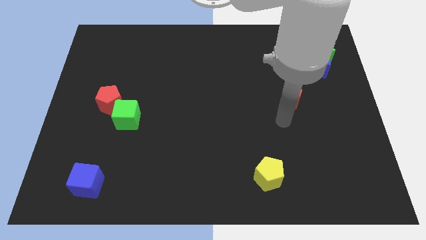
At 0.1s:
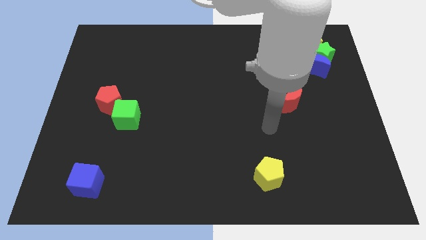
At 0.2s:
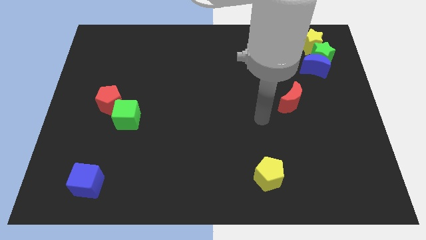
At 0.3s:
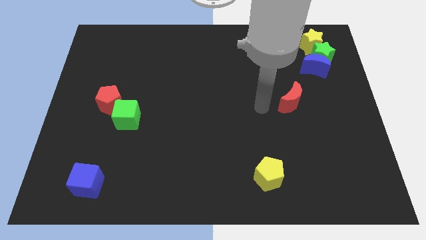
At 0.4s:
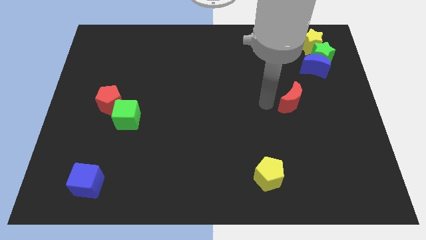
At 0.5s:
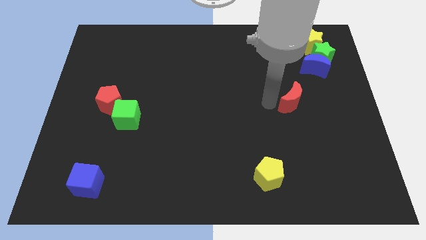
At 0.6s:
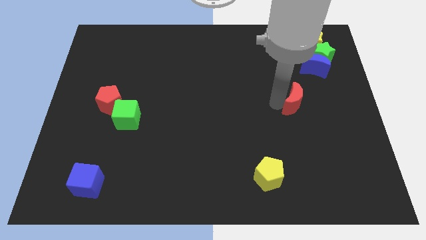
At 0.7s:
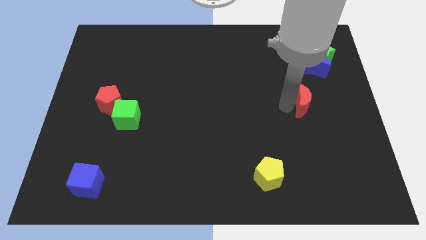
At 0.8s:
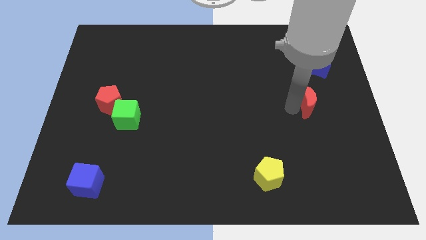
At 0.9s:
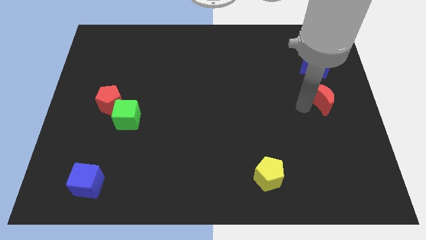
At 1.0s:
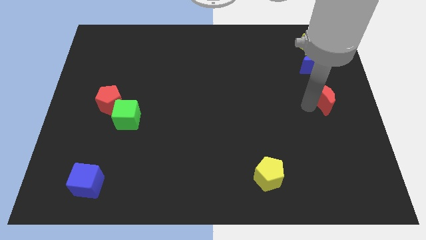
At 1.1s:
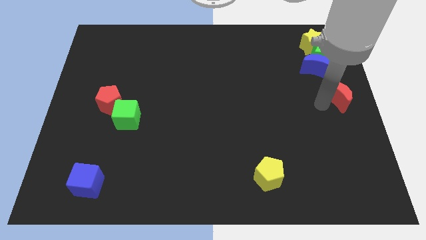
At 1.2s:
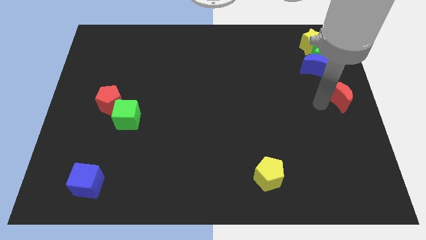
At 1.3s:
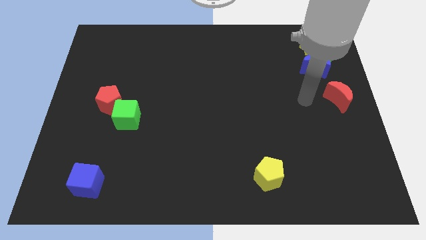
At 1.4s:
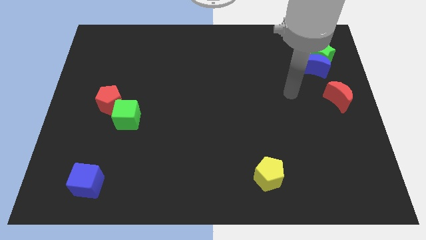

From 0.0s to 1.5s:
push the red crescent to the right of the board

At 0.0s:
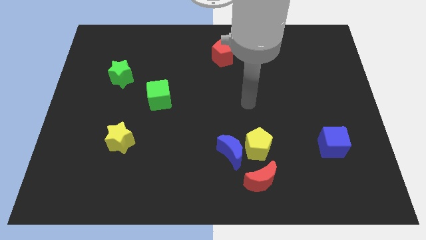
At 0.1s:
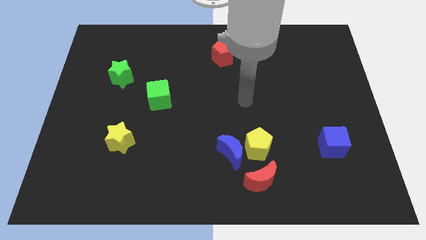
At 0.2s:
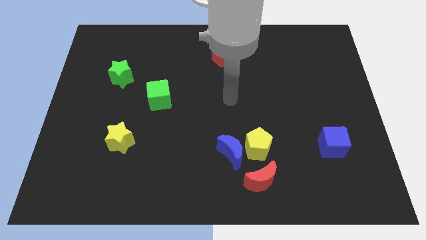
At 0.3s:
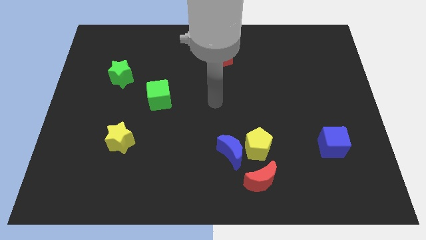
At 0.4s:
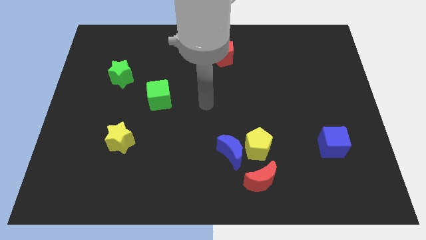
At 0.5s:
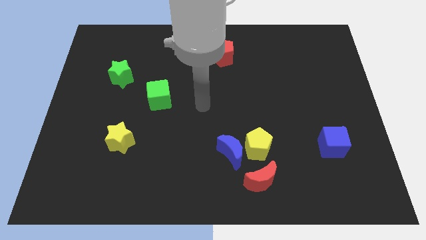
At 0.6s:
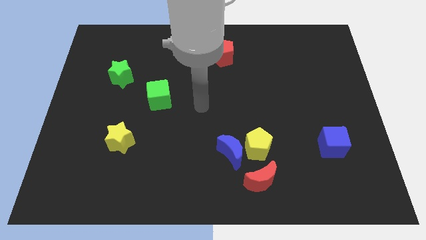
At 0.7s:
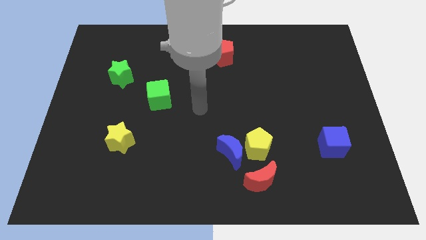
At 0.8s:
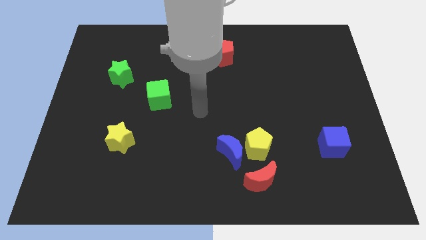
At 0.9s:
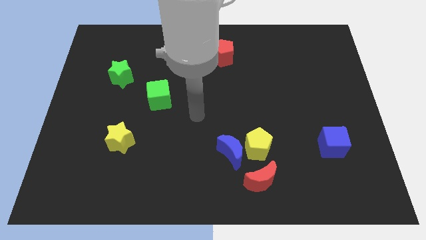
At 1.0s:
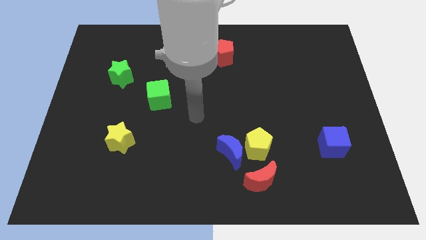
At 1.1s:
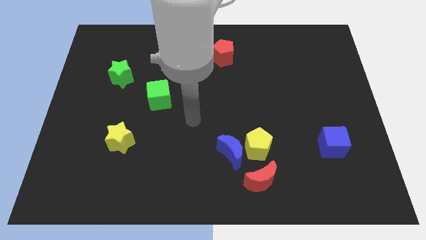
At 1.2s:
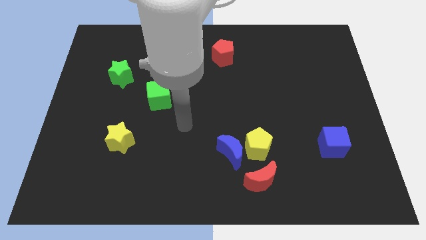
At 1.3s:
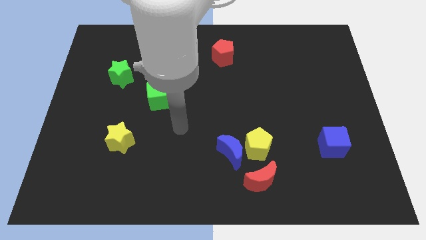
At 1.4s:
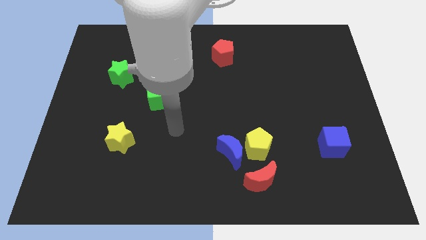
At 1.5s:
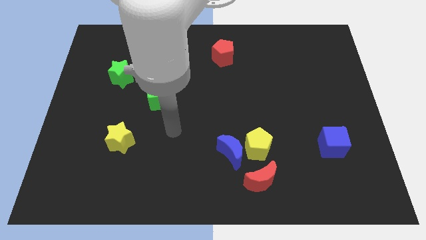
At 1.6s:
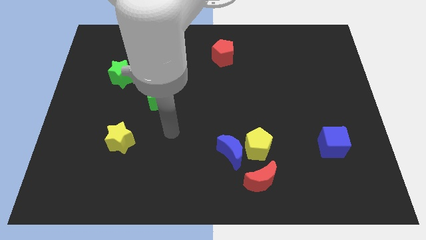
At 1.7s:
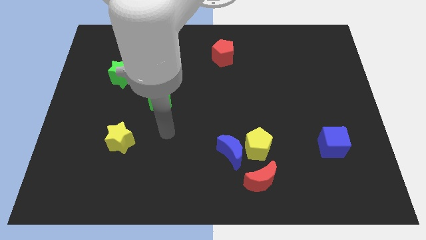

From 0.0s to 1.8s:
place your arm below green cube

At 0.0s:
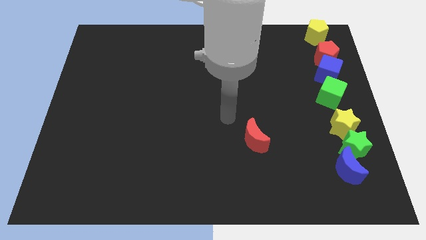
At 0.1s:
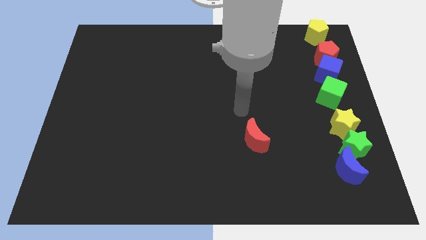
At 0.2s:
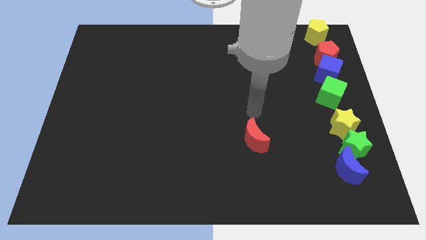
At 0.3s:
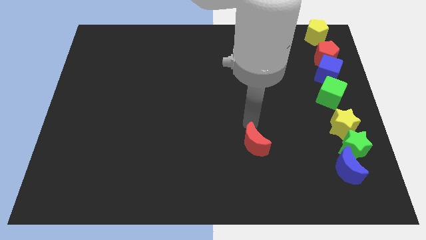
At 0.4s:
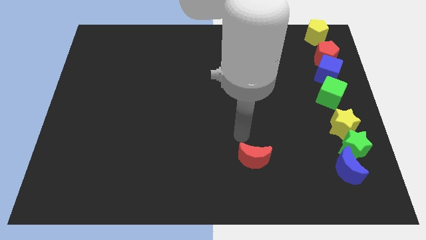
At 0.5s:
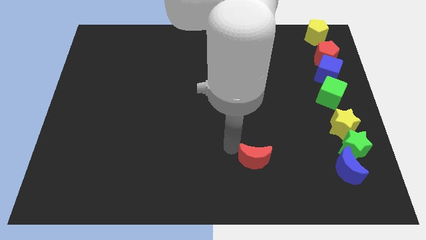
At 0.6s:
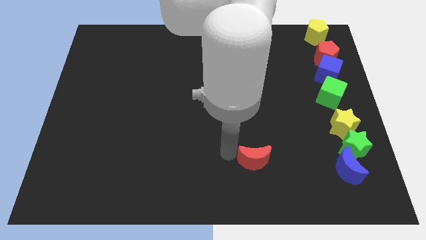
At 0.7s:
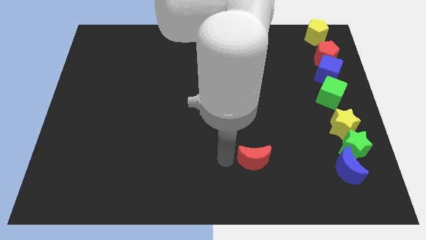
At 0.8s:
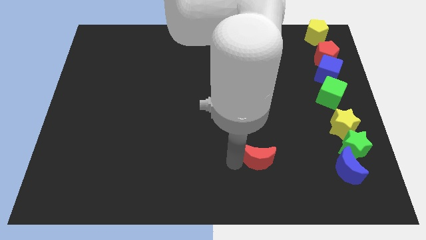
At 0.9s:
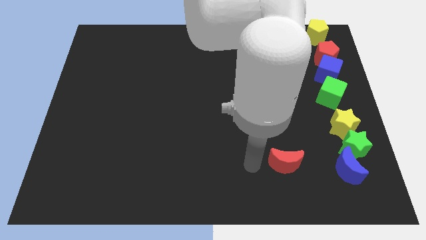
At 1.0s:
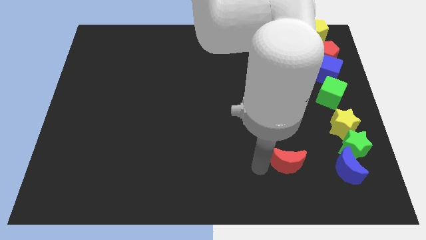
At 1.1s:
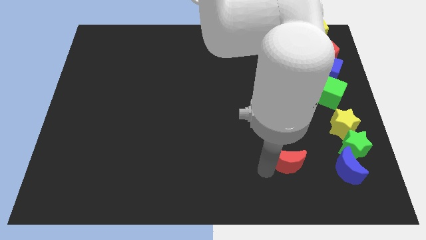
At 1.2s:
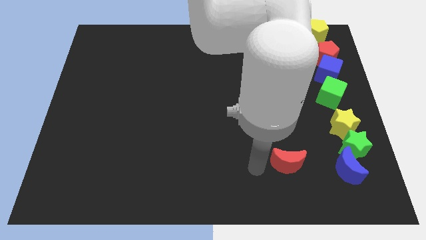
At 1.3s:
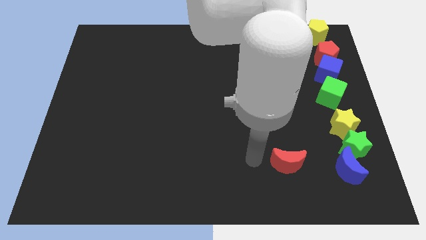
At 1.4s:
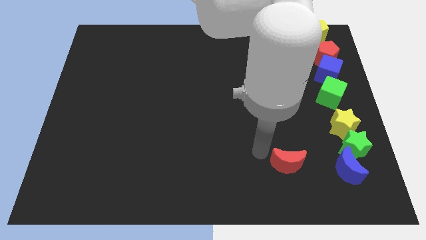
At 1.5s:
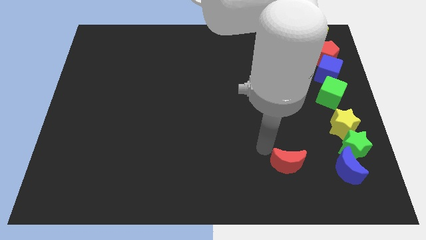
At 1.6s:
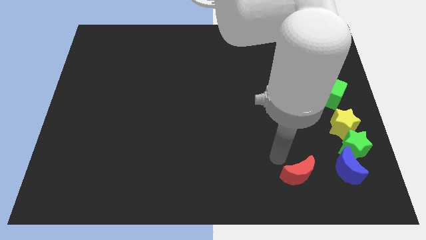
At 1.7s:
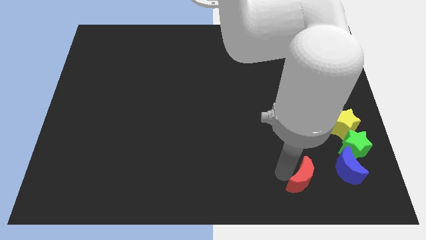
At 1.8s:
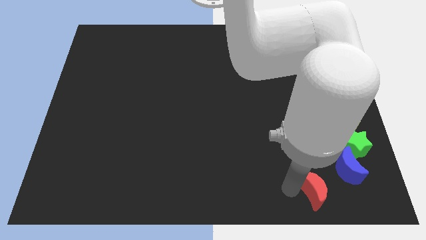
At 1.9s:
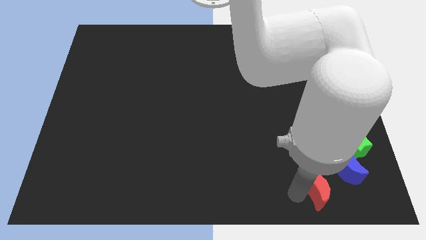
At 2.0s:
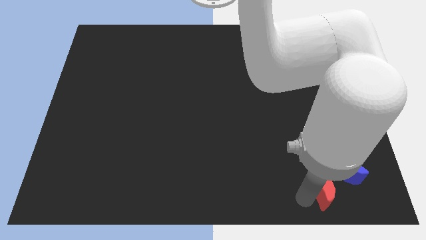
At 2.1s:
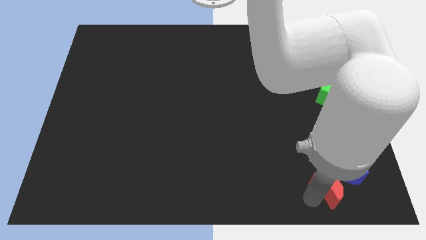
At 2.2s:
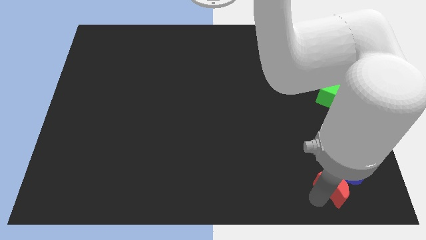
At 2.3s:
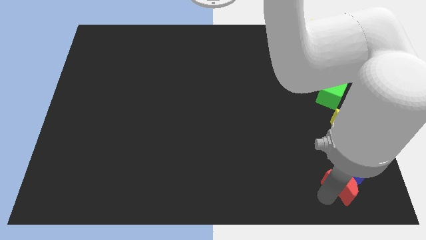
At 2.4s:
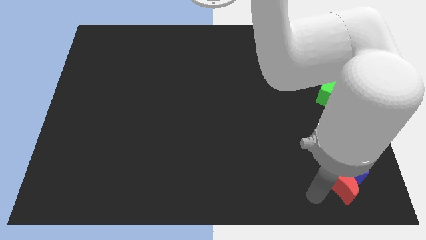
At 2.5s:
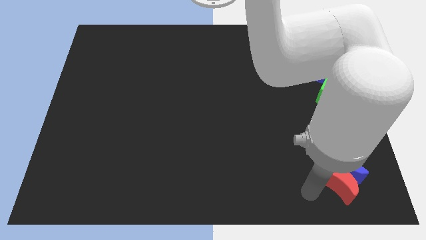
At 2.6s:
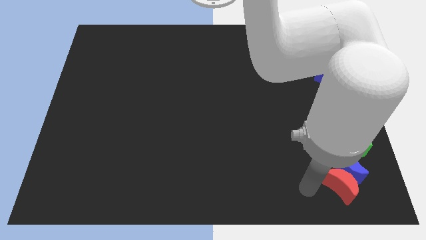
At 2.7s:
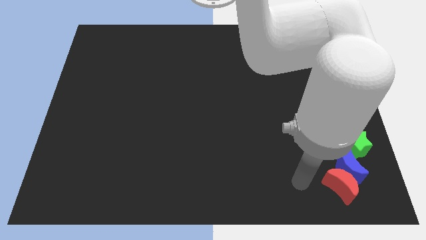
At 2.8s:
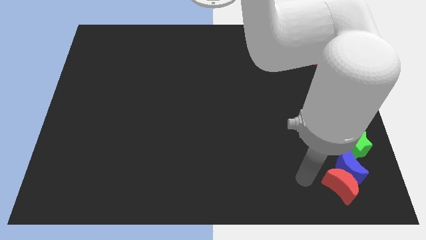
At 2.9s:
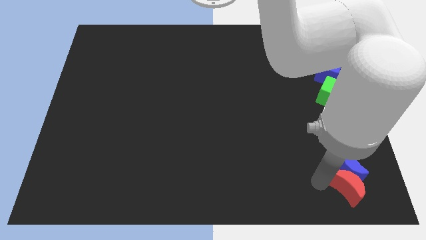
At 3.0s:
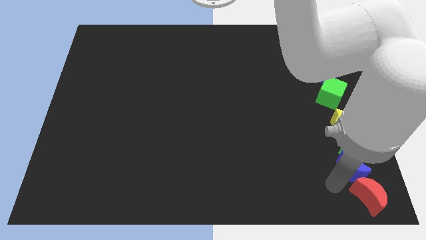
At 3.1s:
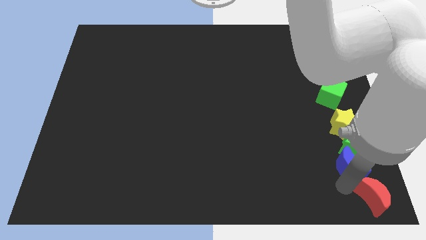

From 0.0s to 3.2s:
place the red crescent below the blue crescent to form a vertical line

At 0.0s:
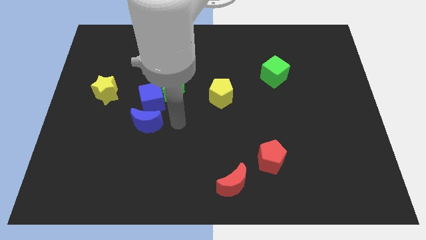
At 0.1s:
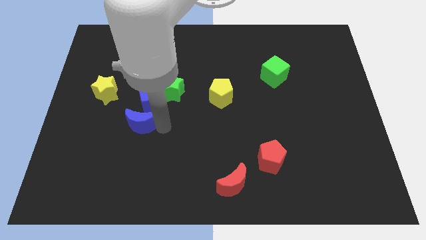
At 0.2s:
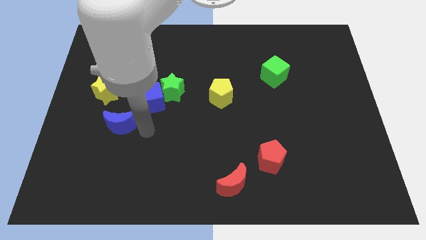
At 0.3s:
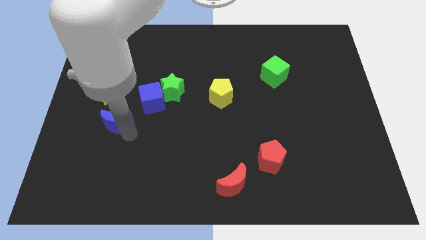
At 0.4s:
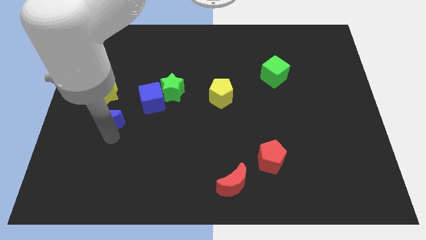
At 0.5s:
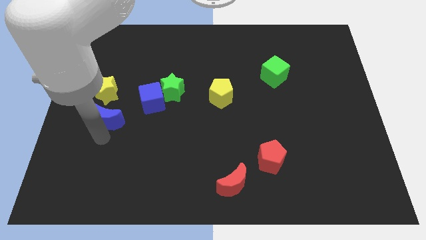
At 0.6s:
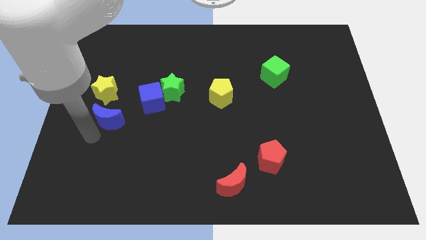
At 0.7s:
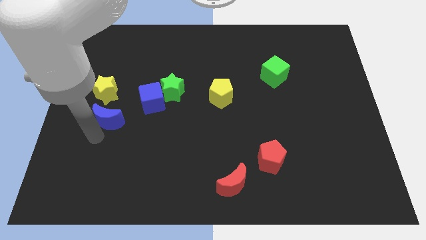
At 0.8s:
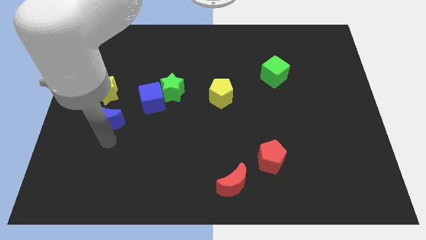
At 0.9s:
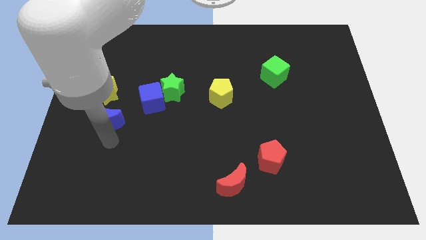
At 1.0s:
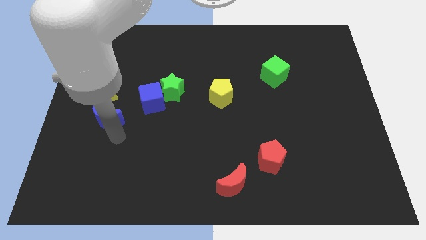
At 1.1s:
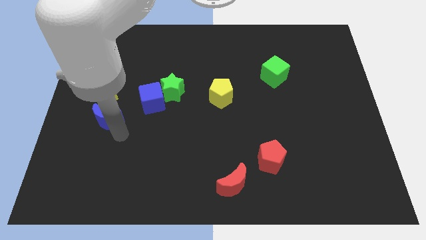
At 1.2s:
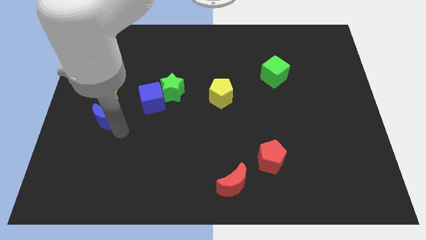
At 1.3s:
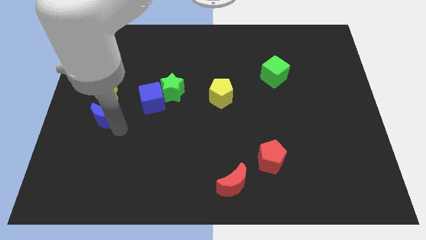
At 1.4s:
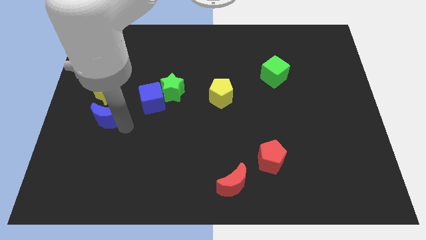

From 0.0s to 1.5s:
place the blue moon below the yellow star

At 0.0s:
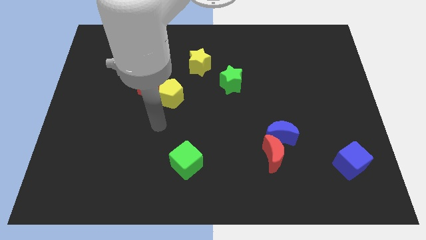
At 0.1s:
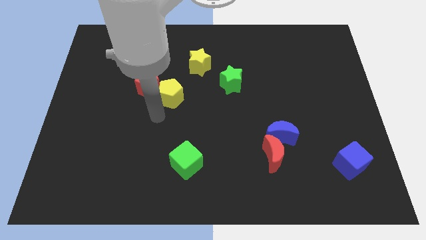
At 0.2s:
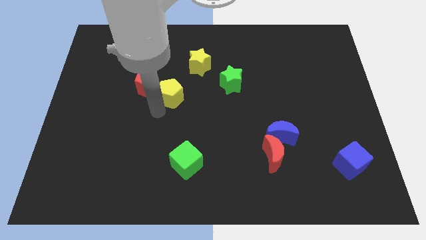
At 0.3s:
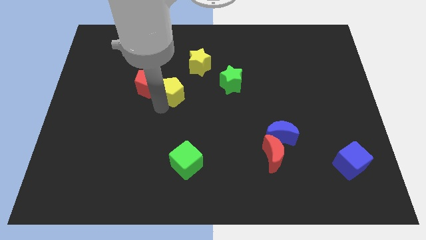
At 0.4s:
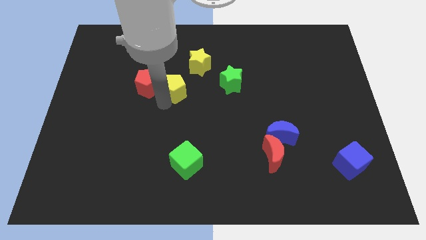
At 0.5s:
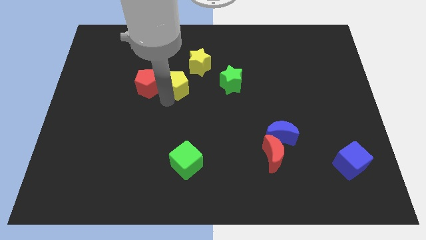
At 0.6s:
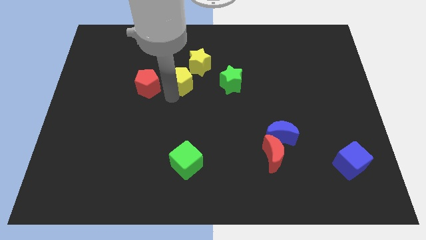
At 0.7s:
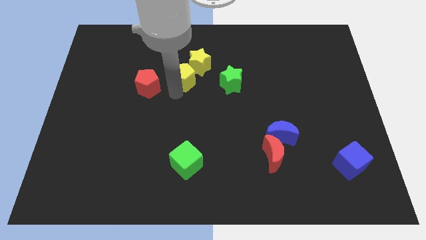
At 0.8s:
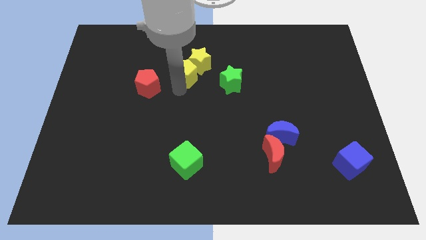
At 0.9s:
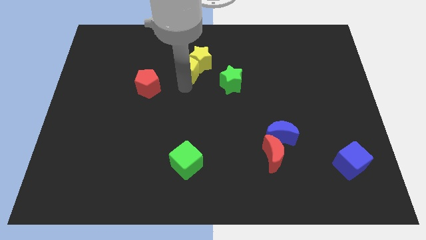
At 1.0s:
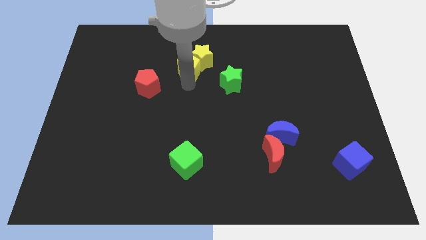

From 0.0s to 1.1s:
push yellow pentagon in yellow star
